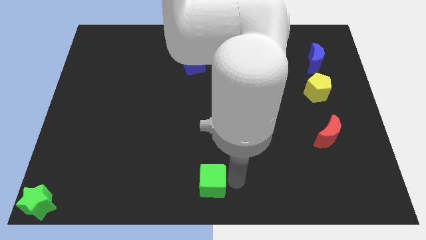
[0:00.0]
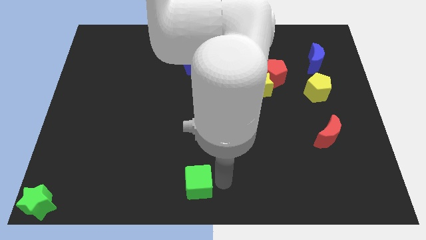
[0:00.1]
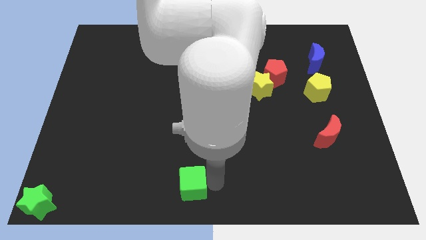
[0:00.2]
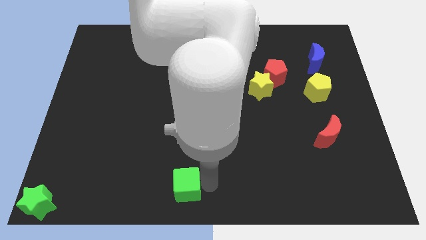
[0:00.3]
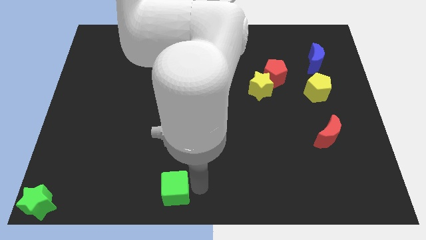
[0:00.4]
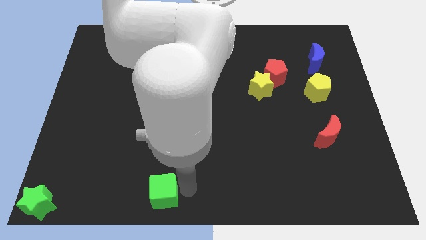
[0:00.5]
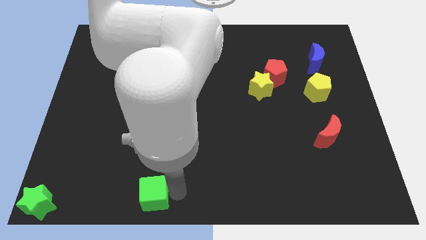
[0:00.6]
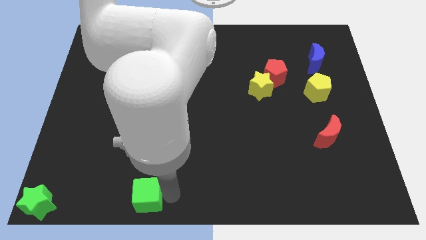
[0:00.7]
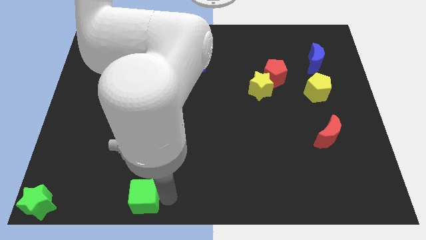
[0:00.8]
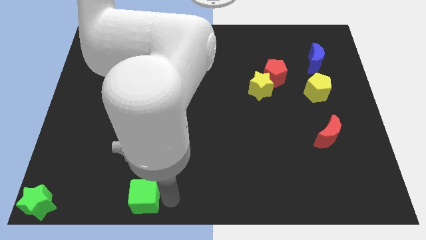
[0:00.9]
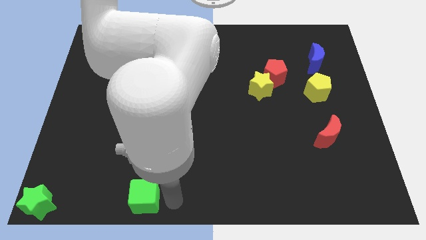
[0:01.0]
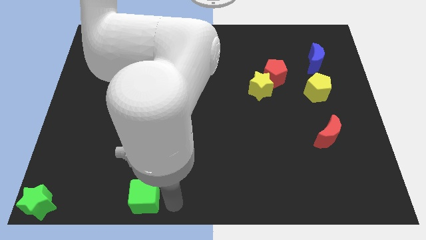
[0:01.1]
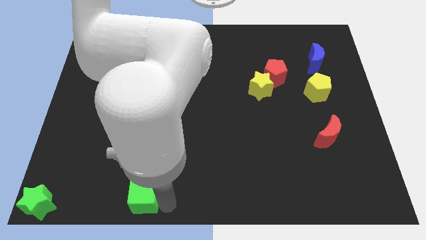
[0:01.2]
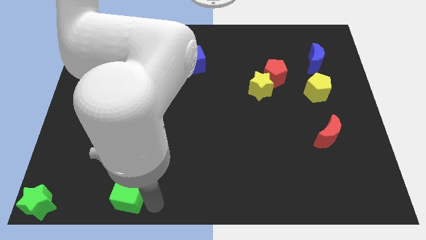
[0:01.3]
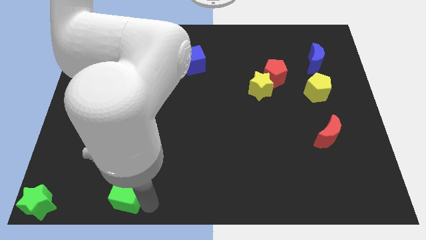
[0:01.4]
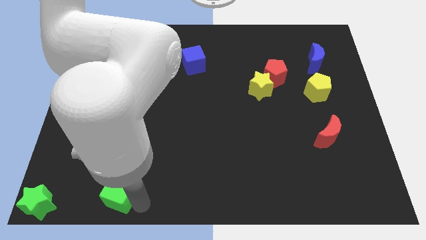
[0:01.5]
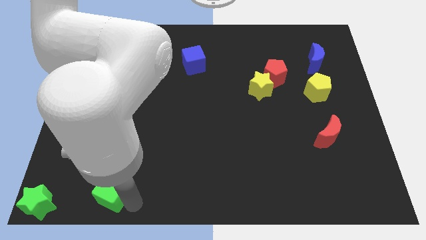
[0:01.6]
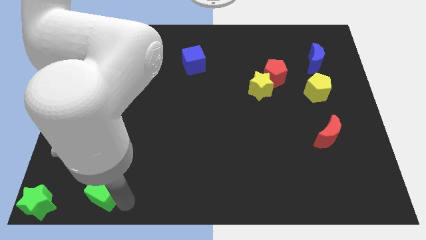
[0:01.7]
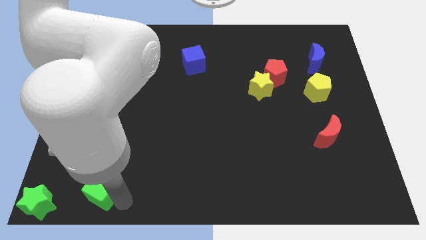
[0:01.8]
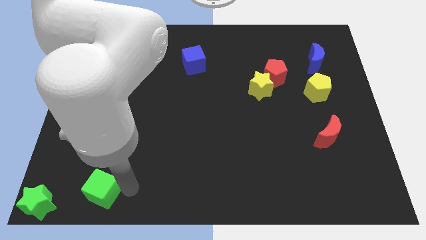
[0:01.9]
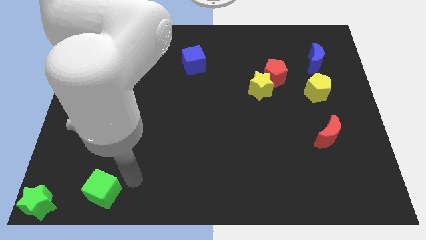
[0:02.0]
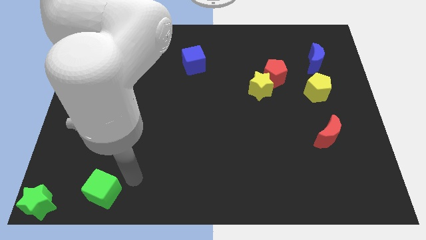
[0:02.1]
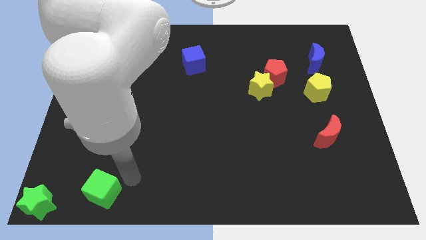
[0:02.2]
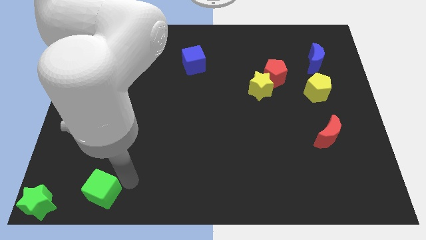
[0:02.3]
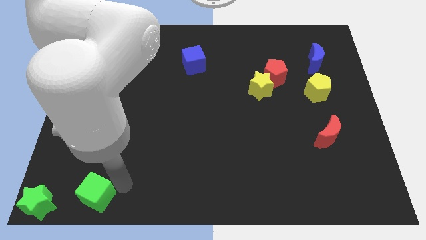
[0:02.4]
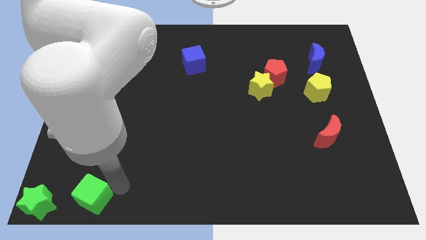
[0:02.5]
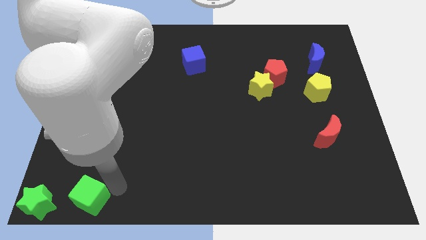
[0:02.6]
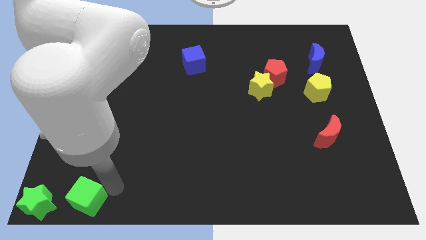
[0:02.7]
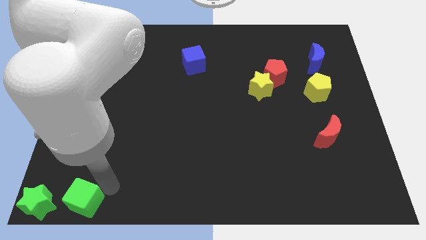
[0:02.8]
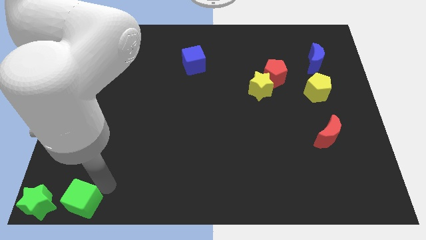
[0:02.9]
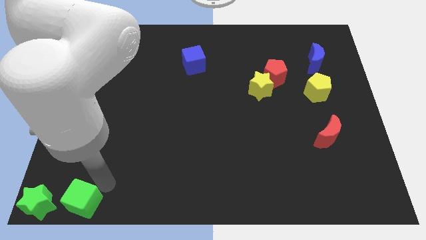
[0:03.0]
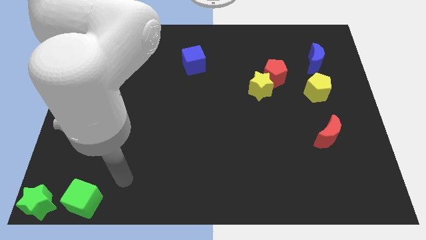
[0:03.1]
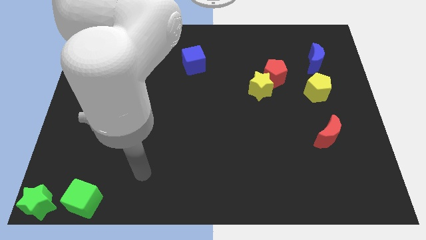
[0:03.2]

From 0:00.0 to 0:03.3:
place the green cube at the right side of the green star

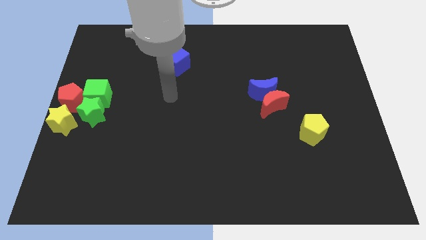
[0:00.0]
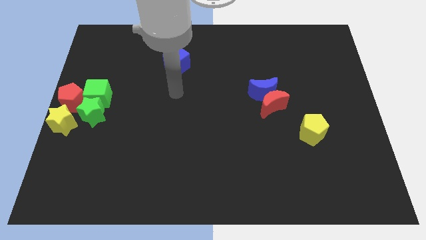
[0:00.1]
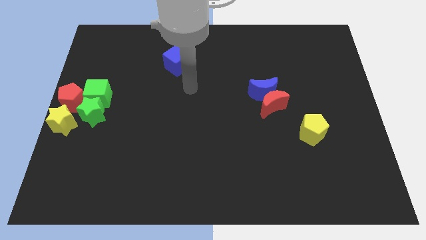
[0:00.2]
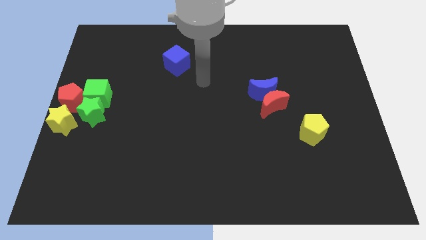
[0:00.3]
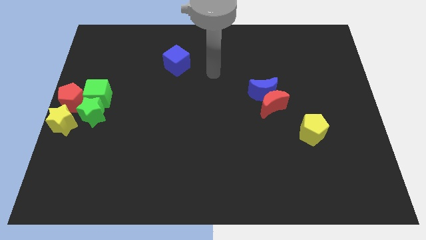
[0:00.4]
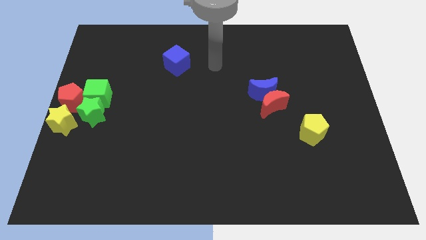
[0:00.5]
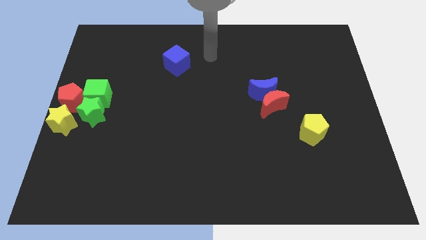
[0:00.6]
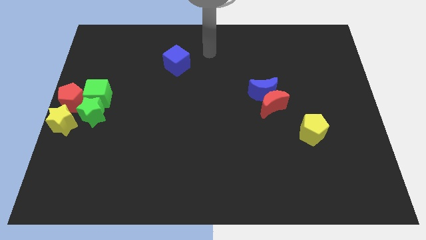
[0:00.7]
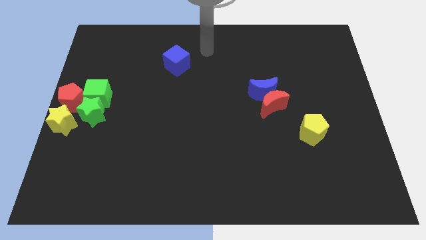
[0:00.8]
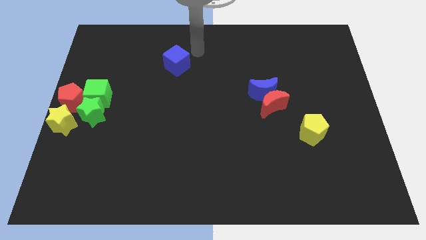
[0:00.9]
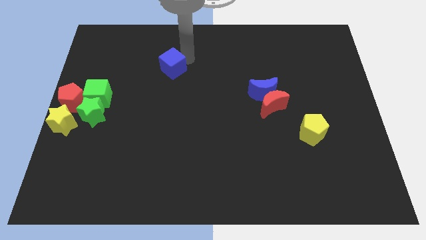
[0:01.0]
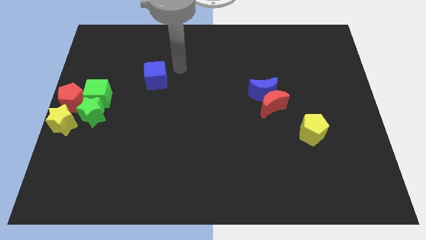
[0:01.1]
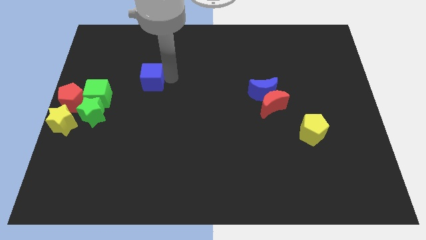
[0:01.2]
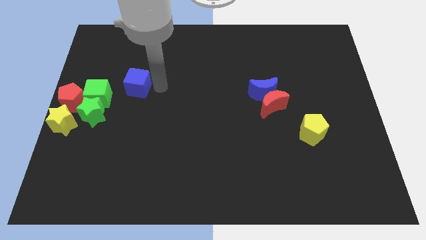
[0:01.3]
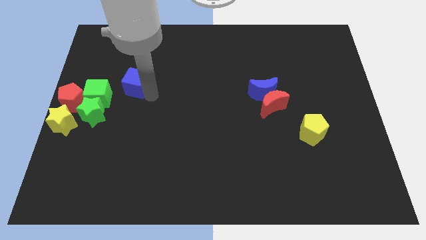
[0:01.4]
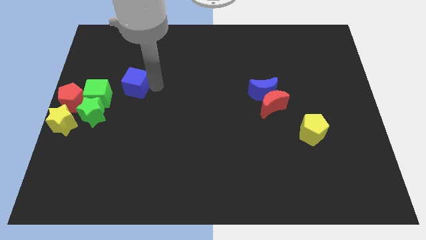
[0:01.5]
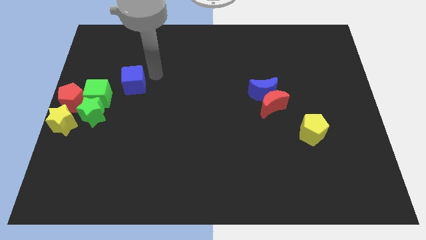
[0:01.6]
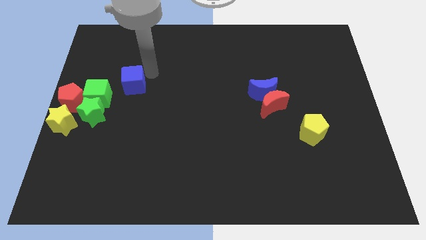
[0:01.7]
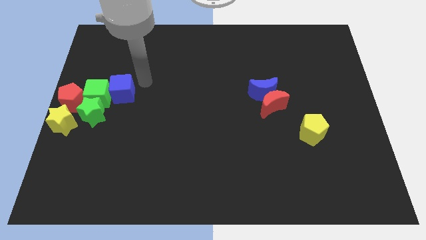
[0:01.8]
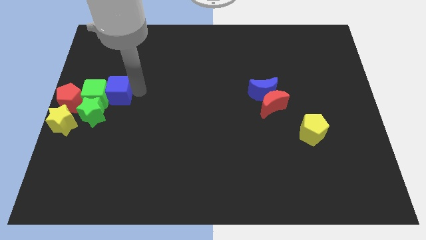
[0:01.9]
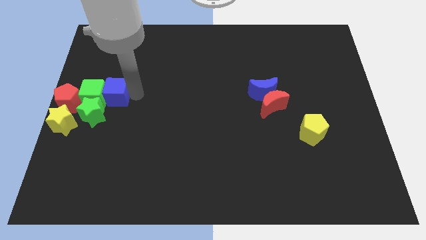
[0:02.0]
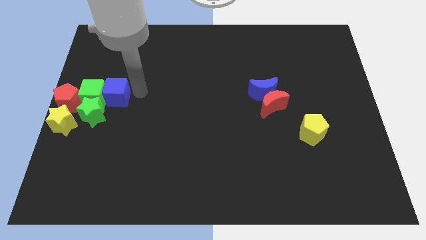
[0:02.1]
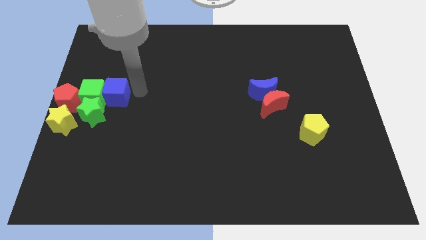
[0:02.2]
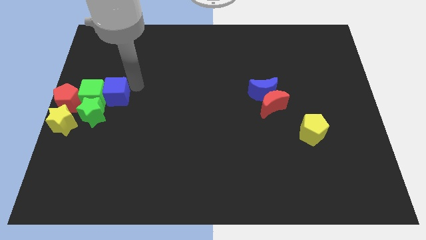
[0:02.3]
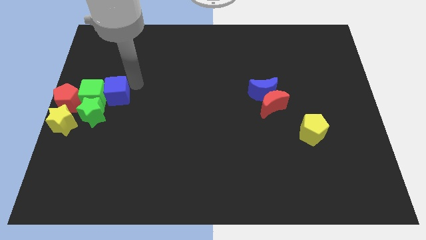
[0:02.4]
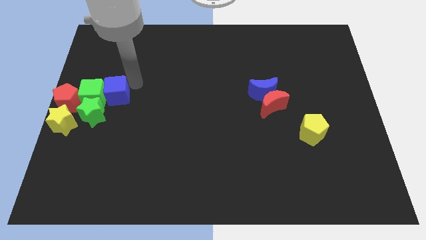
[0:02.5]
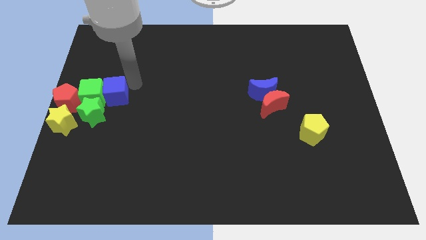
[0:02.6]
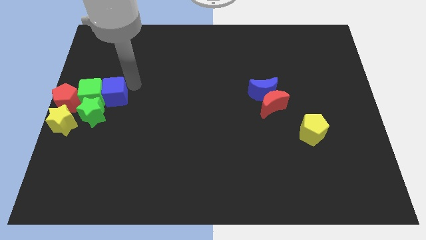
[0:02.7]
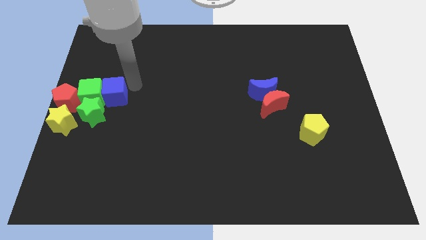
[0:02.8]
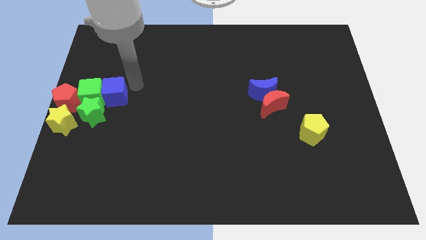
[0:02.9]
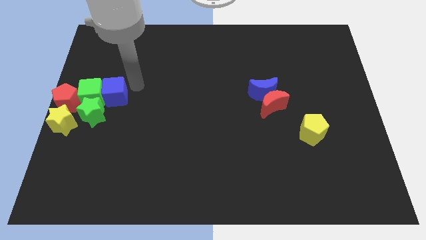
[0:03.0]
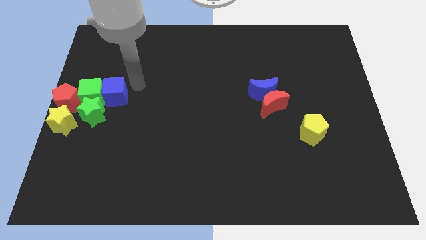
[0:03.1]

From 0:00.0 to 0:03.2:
push the blue cube to the right of green cube

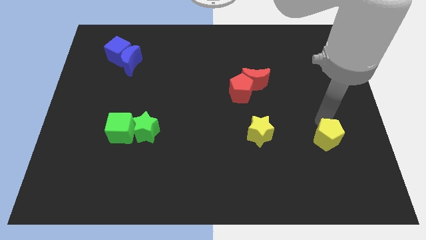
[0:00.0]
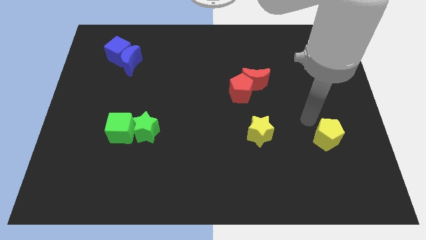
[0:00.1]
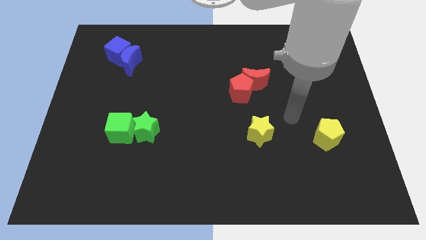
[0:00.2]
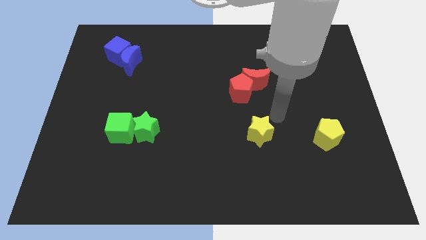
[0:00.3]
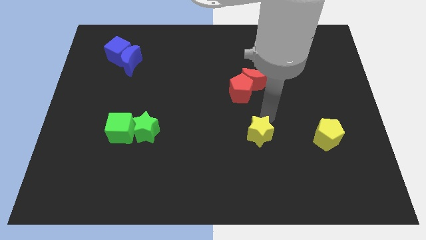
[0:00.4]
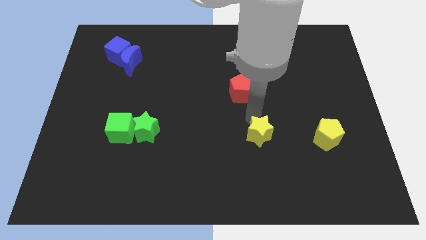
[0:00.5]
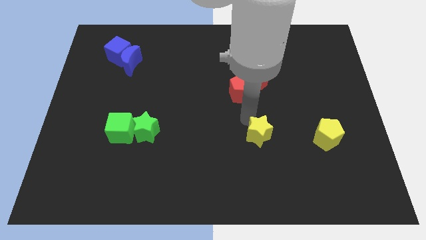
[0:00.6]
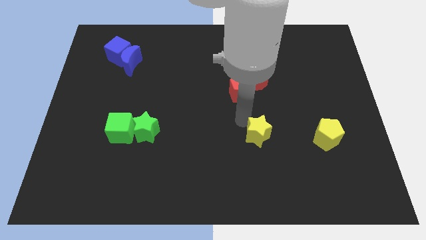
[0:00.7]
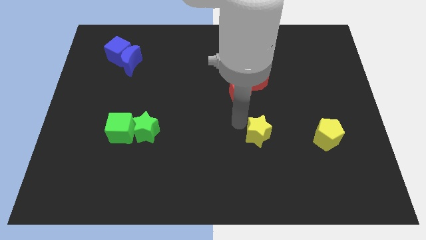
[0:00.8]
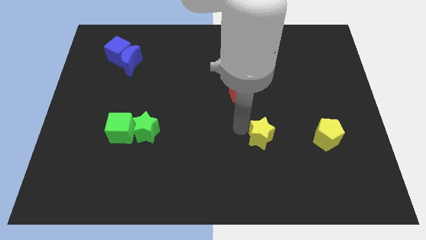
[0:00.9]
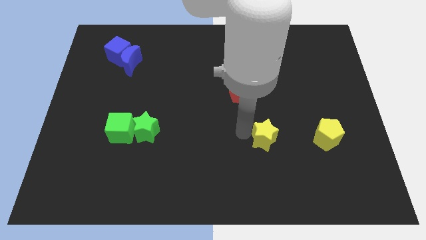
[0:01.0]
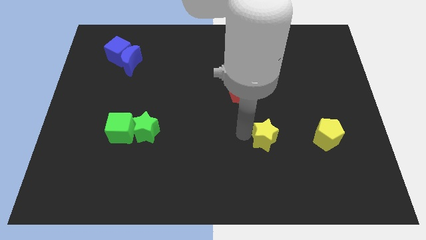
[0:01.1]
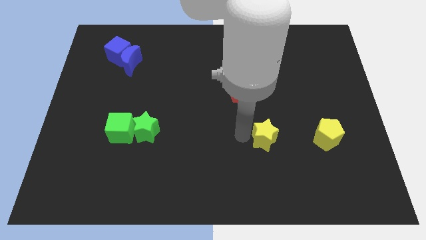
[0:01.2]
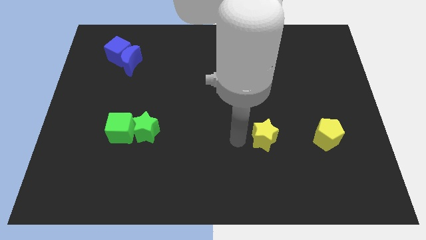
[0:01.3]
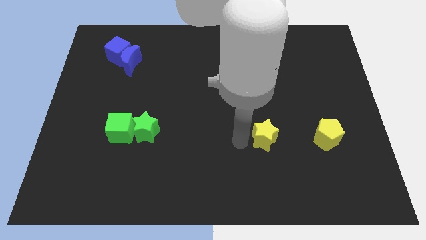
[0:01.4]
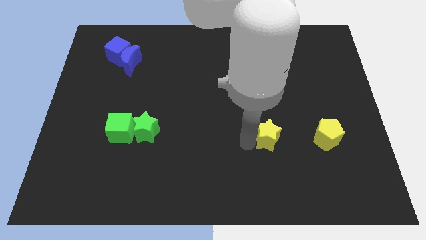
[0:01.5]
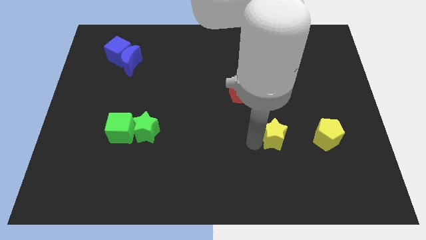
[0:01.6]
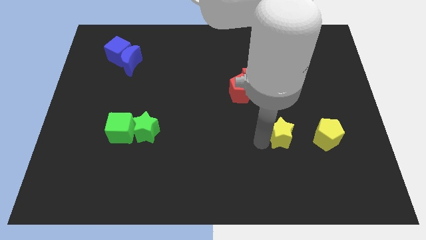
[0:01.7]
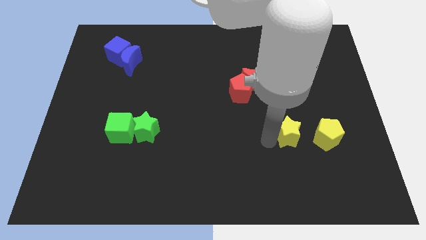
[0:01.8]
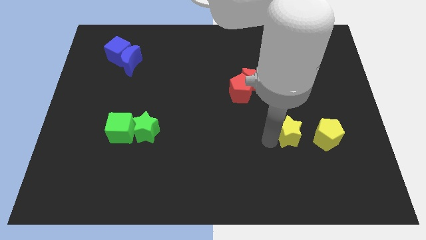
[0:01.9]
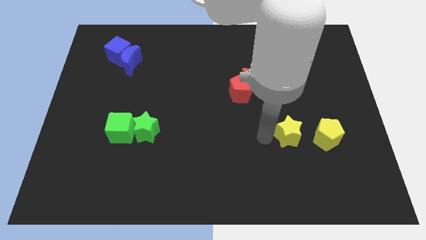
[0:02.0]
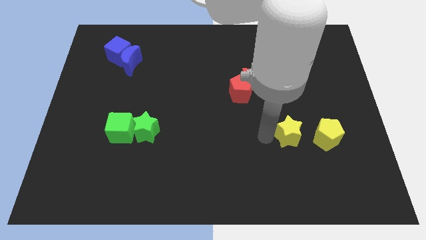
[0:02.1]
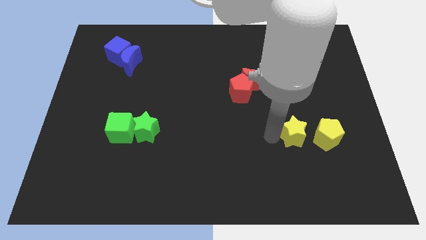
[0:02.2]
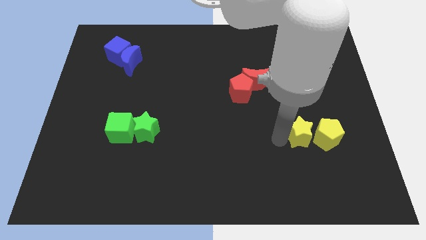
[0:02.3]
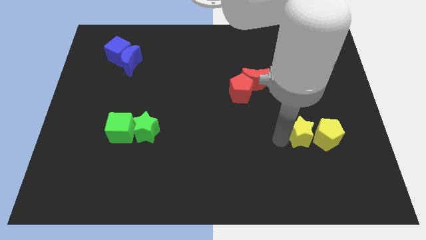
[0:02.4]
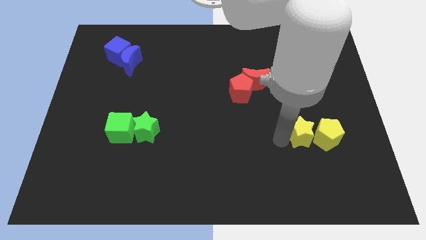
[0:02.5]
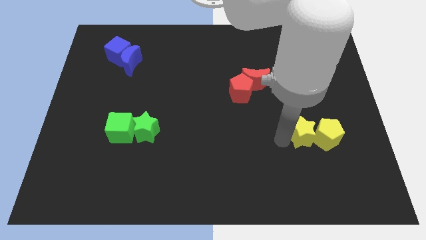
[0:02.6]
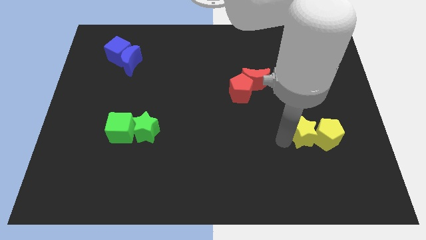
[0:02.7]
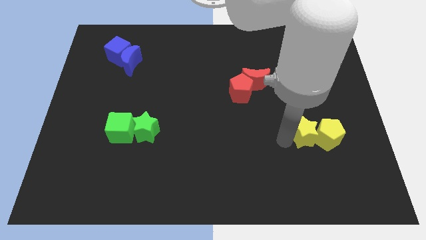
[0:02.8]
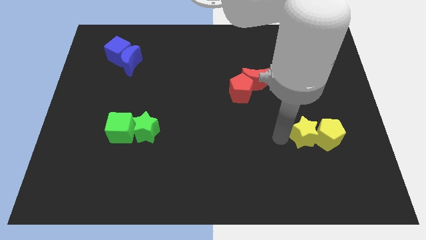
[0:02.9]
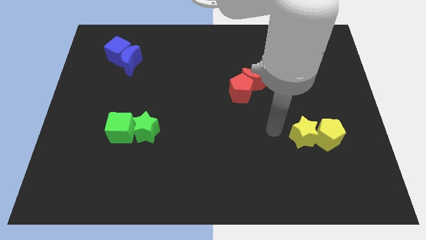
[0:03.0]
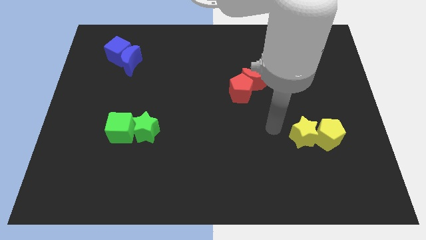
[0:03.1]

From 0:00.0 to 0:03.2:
move the yellow star to the left of the yellow penatgon
